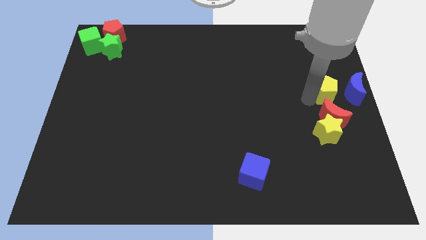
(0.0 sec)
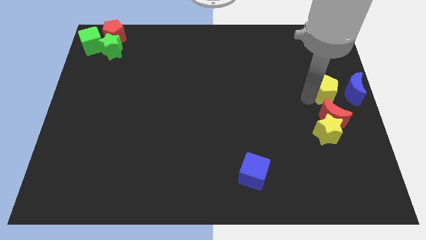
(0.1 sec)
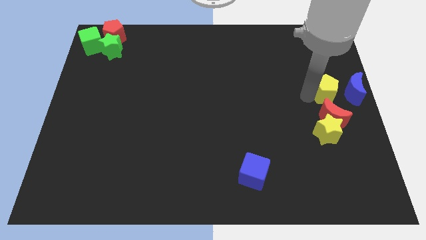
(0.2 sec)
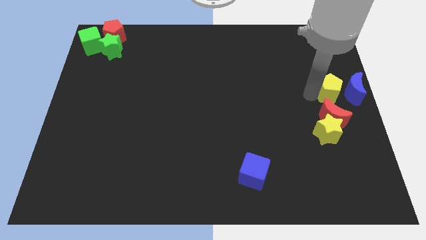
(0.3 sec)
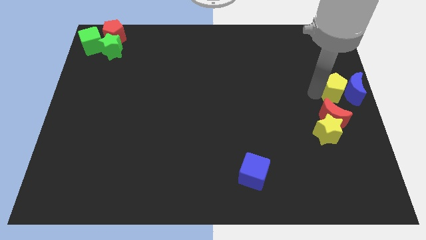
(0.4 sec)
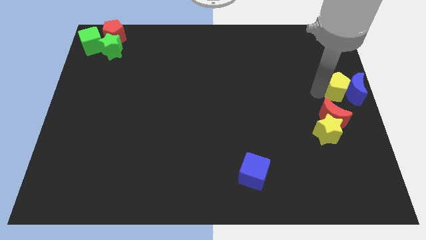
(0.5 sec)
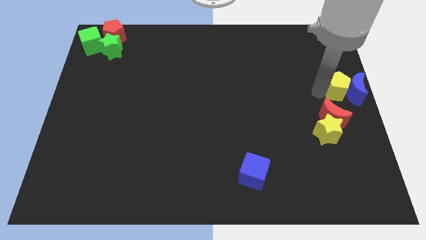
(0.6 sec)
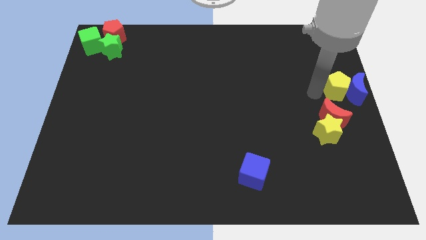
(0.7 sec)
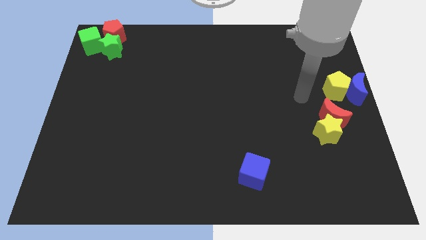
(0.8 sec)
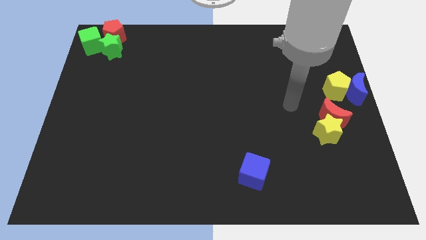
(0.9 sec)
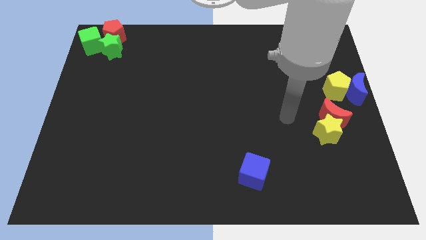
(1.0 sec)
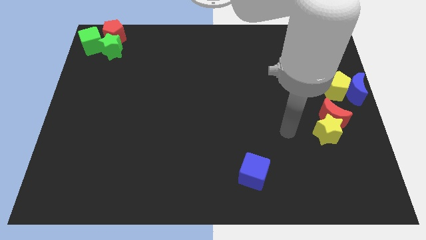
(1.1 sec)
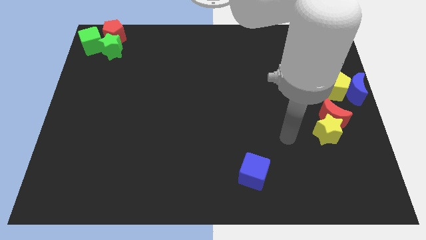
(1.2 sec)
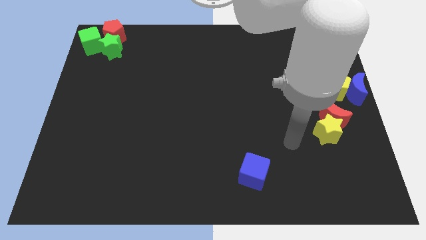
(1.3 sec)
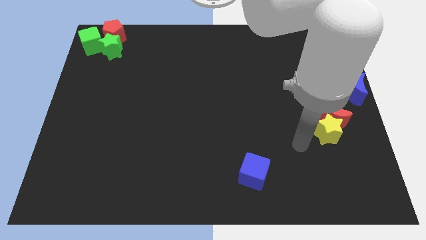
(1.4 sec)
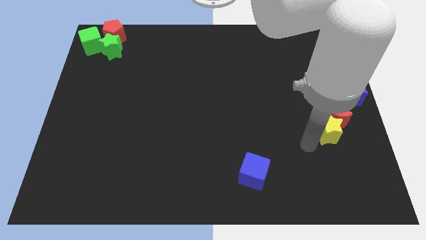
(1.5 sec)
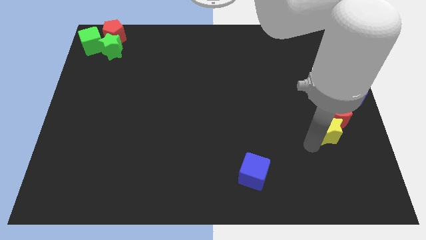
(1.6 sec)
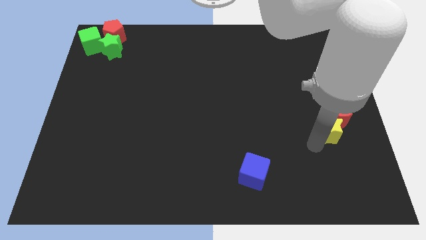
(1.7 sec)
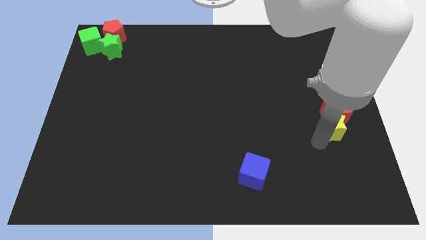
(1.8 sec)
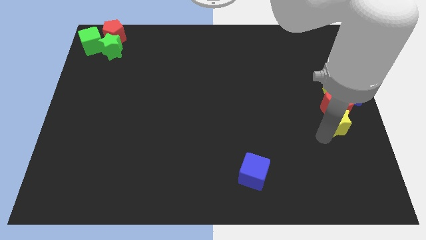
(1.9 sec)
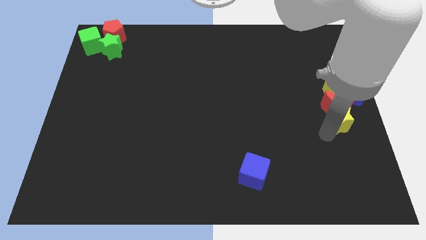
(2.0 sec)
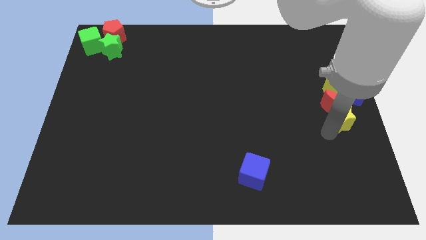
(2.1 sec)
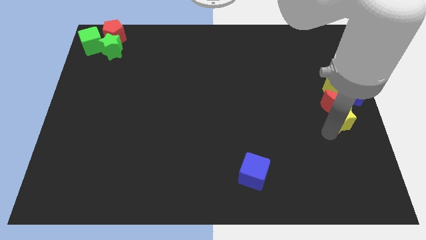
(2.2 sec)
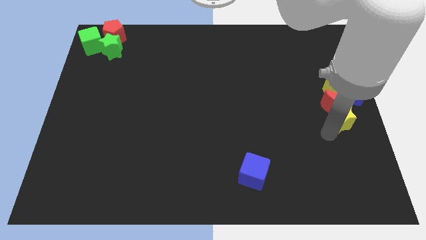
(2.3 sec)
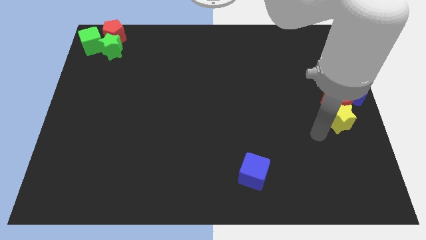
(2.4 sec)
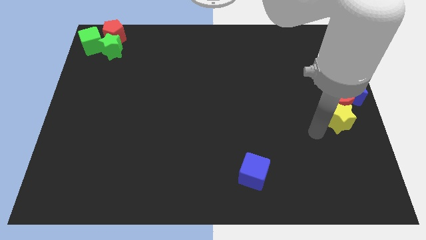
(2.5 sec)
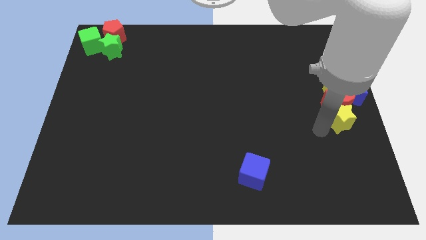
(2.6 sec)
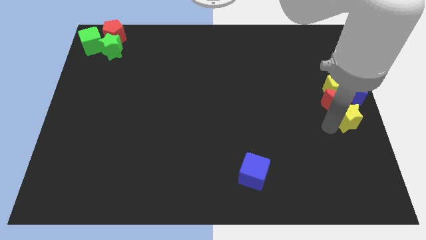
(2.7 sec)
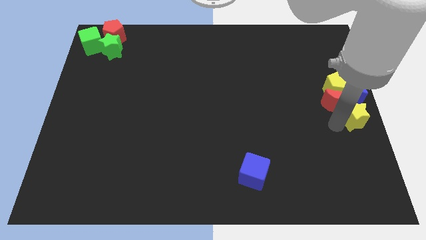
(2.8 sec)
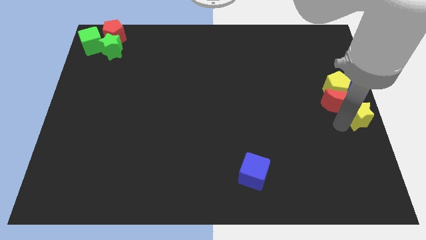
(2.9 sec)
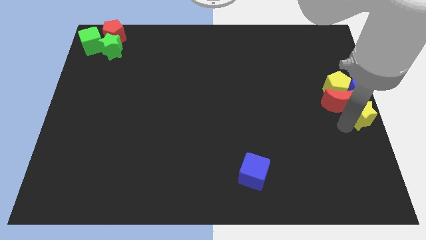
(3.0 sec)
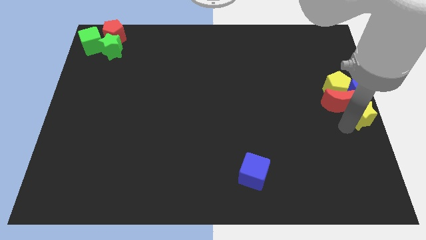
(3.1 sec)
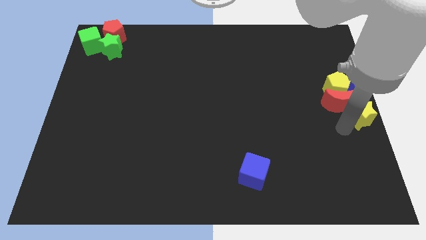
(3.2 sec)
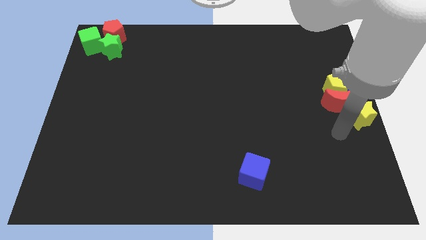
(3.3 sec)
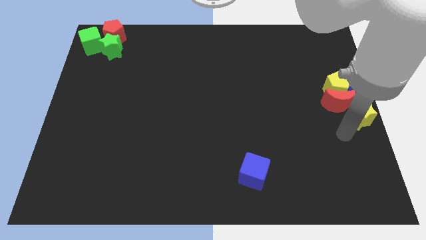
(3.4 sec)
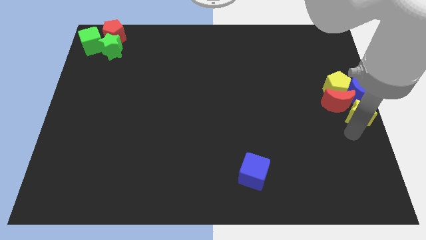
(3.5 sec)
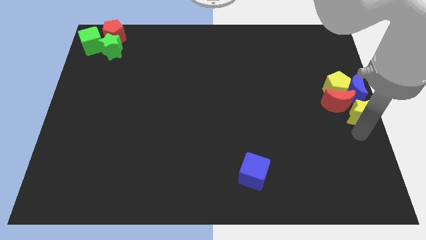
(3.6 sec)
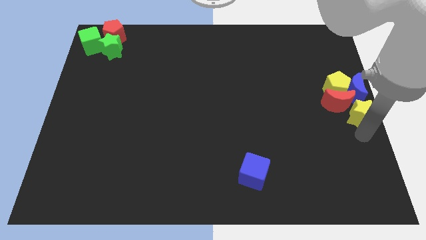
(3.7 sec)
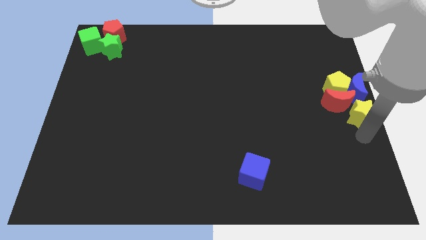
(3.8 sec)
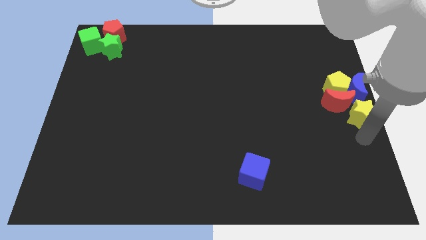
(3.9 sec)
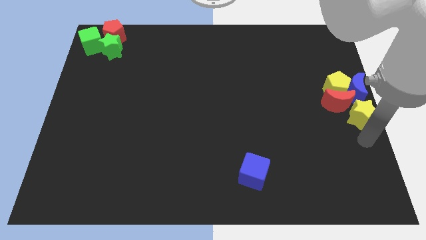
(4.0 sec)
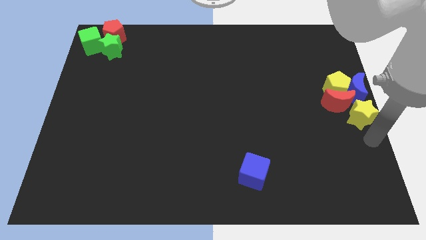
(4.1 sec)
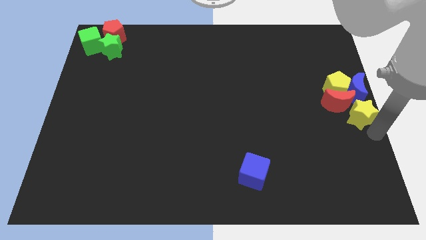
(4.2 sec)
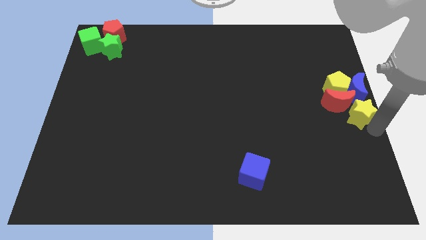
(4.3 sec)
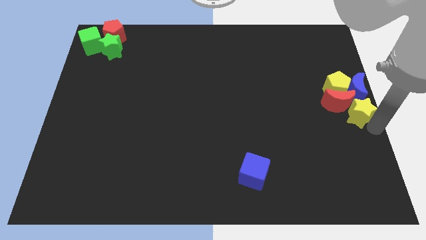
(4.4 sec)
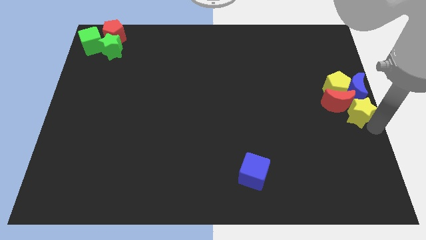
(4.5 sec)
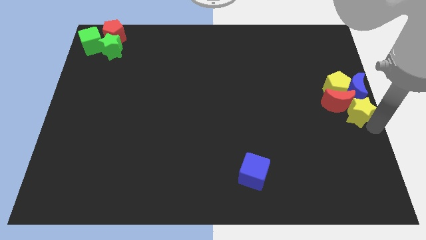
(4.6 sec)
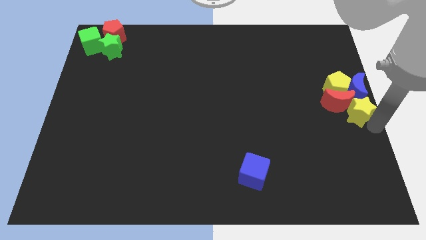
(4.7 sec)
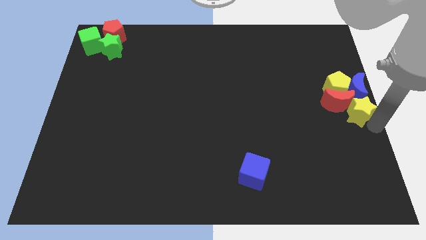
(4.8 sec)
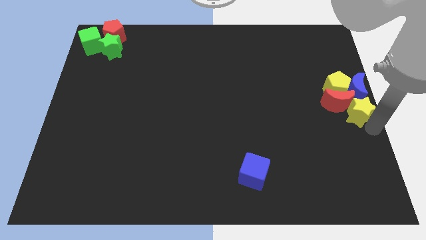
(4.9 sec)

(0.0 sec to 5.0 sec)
push all the blocks into the center right side of the block

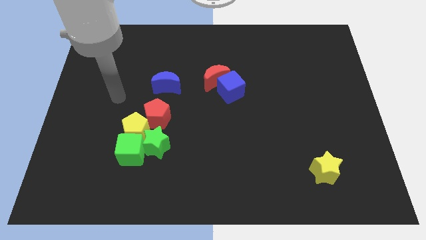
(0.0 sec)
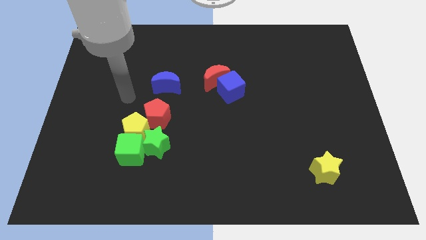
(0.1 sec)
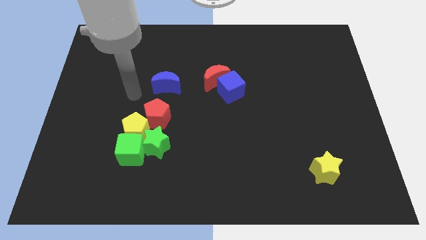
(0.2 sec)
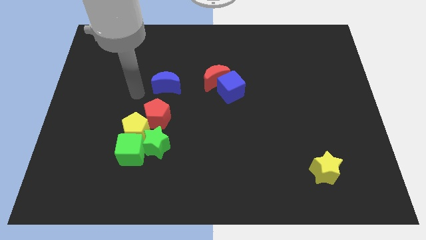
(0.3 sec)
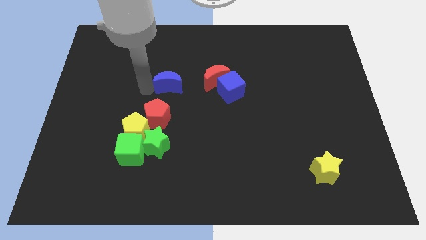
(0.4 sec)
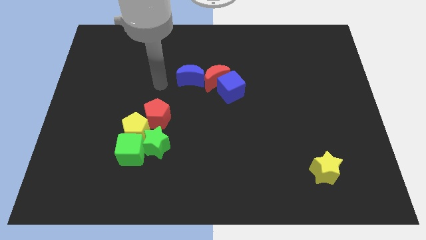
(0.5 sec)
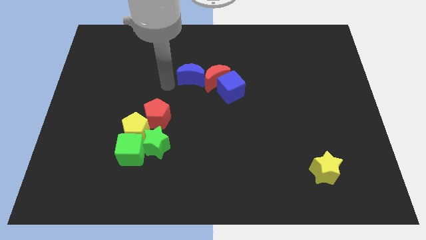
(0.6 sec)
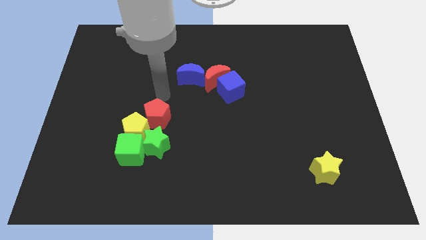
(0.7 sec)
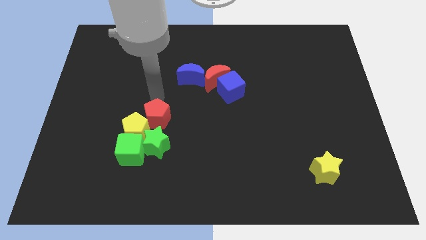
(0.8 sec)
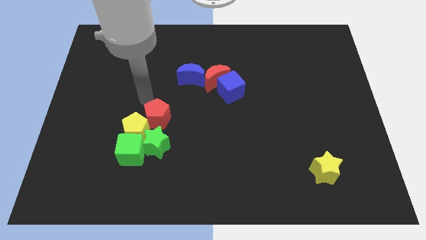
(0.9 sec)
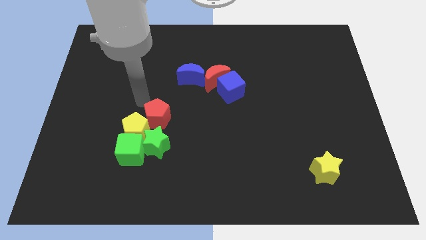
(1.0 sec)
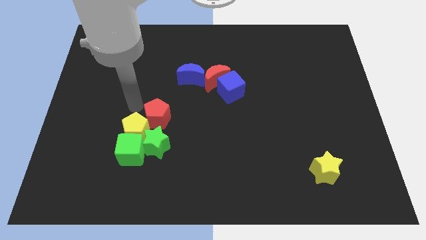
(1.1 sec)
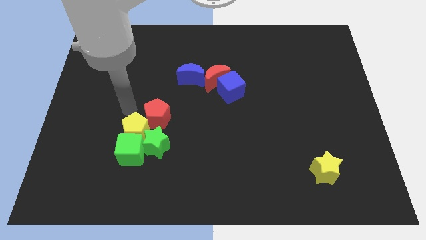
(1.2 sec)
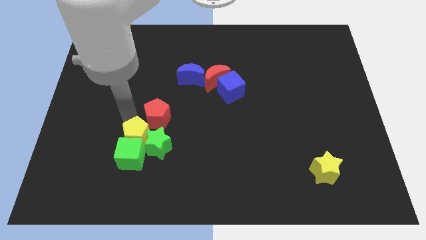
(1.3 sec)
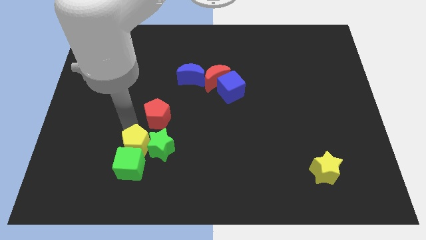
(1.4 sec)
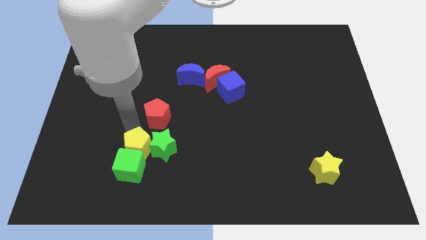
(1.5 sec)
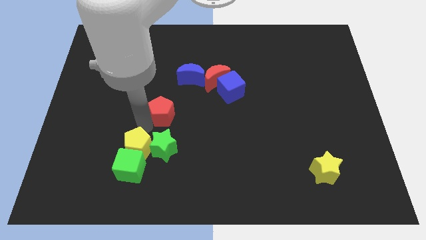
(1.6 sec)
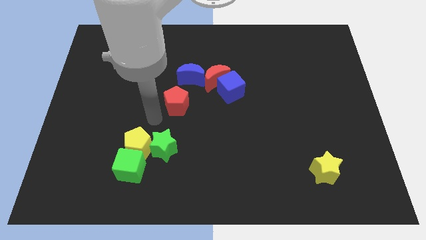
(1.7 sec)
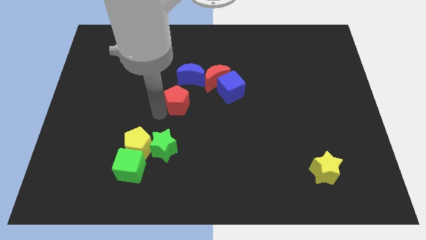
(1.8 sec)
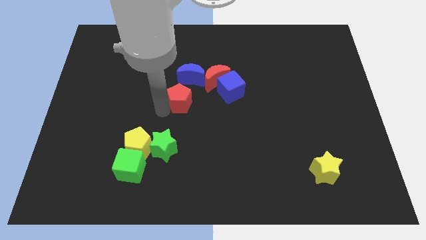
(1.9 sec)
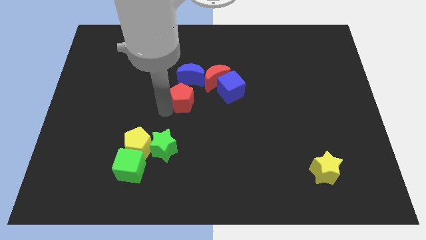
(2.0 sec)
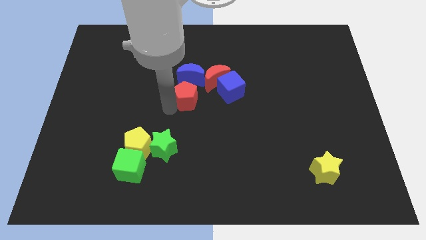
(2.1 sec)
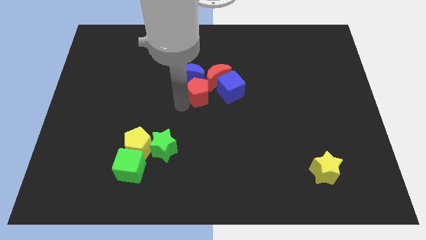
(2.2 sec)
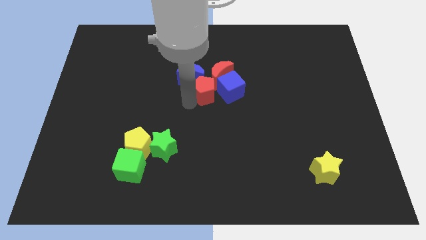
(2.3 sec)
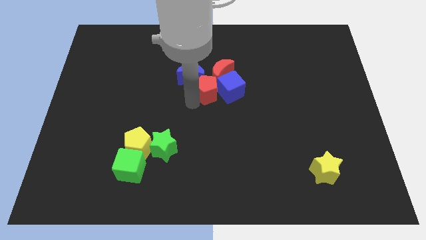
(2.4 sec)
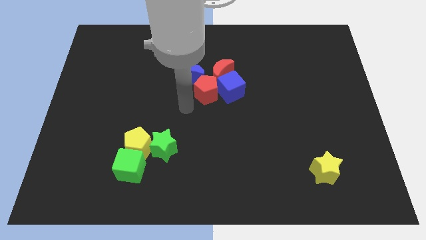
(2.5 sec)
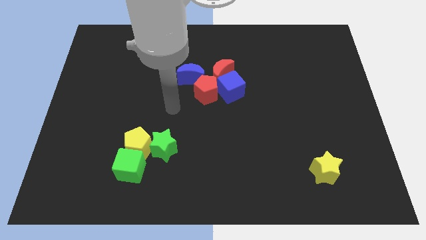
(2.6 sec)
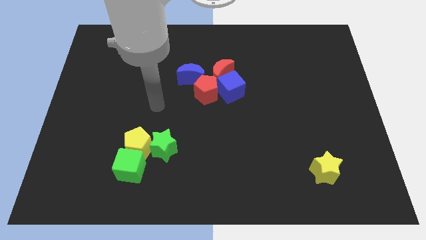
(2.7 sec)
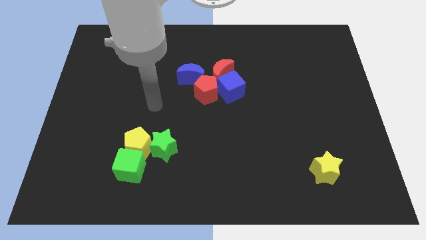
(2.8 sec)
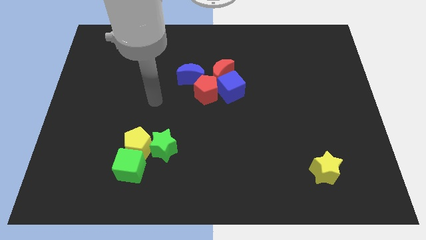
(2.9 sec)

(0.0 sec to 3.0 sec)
put the red pentagon into the red moon

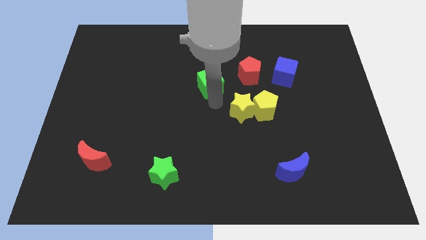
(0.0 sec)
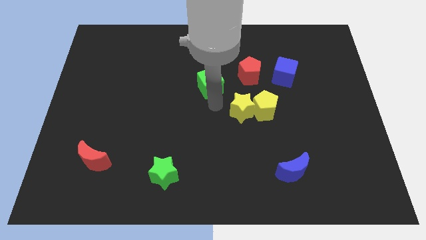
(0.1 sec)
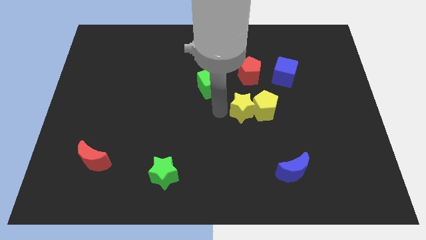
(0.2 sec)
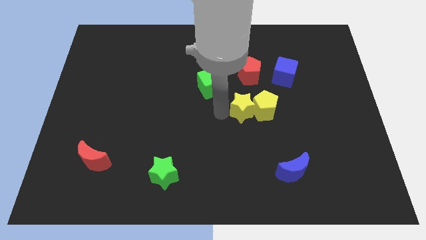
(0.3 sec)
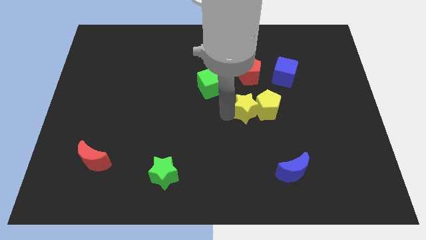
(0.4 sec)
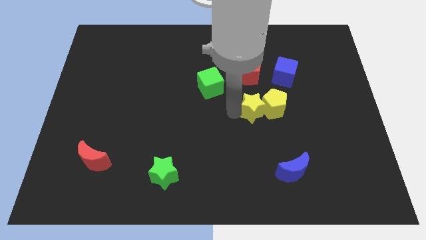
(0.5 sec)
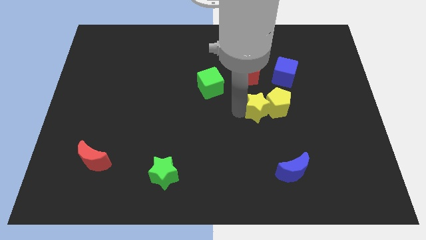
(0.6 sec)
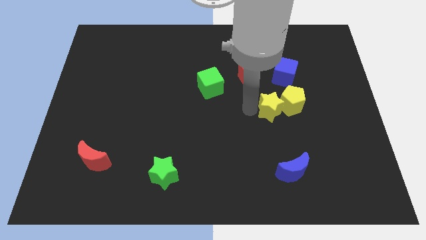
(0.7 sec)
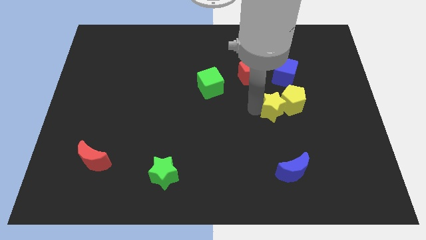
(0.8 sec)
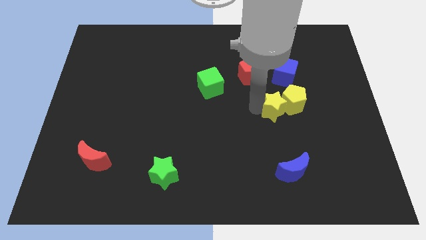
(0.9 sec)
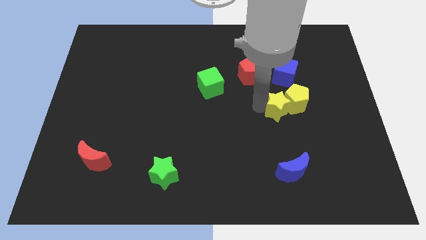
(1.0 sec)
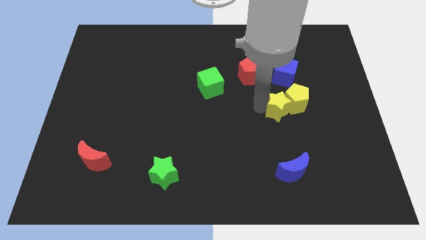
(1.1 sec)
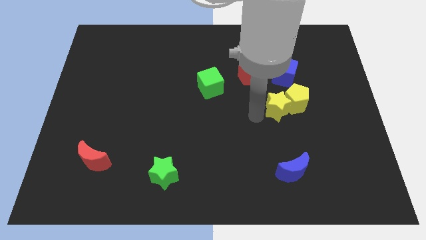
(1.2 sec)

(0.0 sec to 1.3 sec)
put the group of yellow blocks below the blue cube
